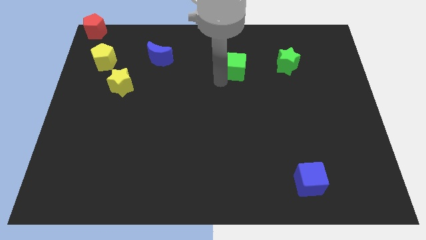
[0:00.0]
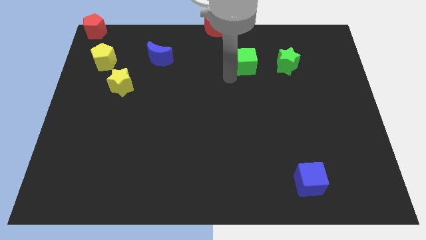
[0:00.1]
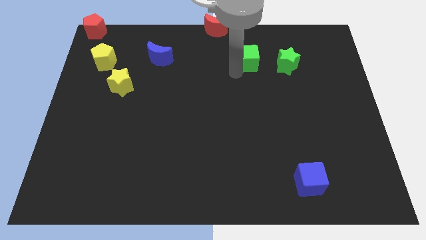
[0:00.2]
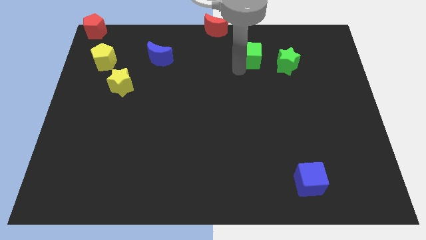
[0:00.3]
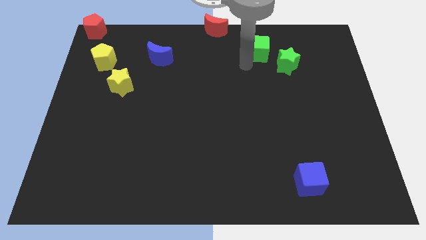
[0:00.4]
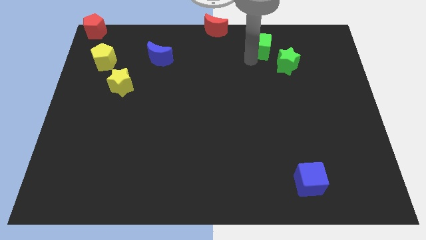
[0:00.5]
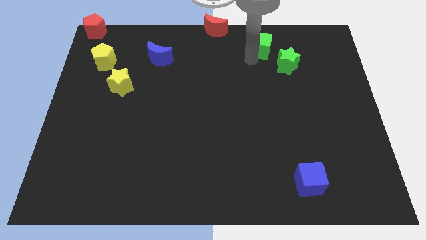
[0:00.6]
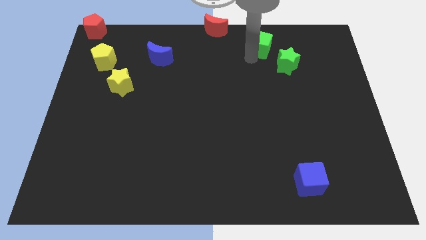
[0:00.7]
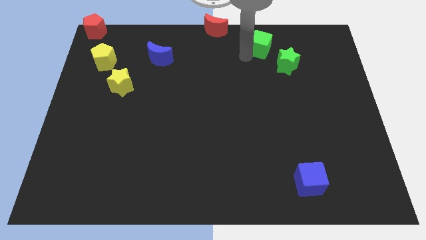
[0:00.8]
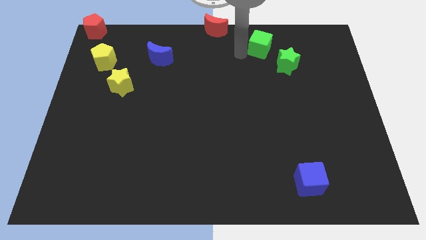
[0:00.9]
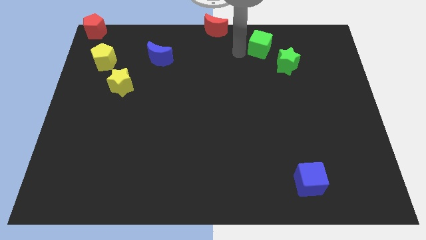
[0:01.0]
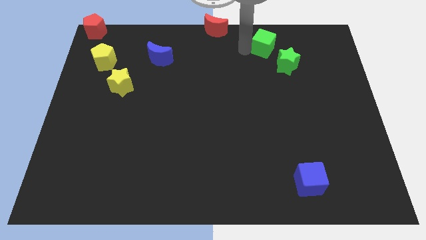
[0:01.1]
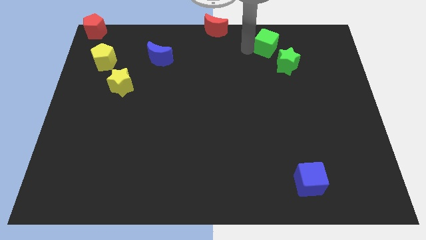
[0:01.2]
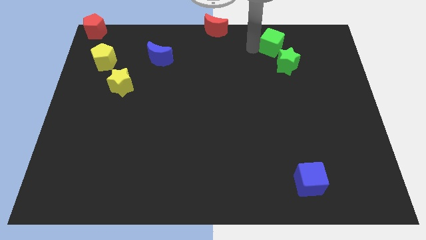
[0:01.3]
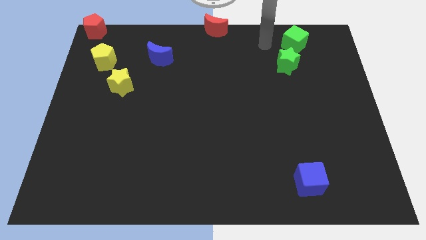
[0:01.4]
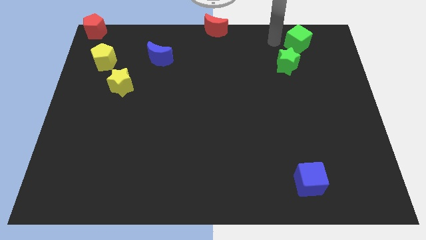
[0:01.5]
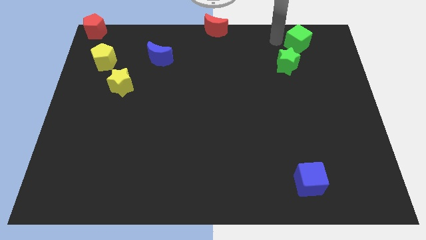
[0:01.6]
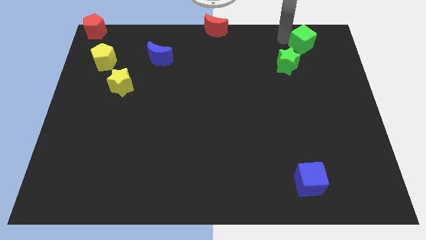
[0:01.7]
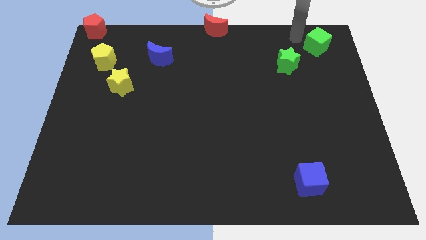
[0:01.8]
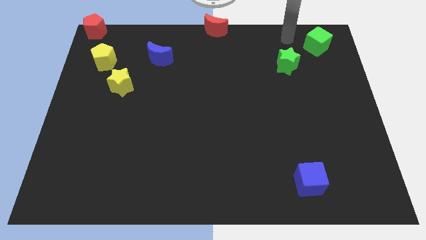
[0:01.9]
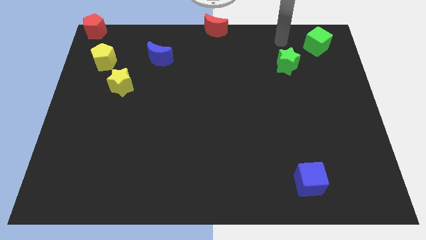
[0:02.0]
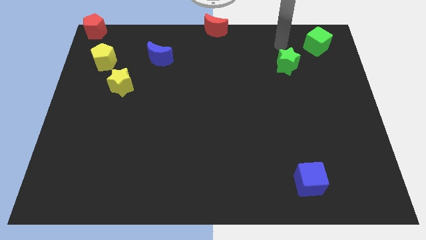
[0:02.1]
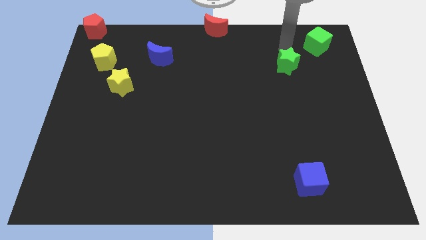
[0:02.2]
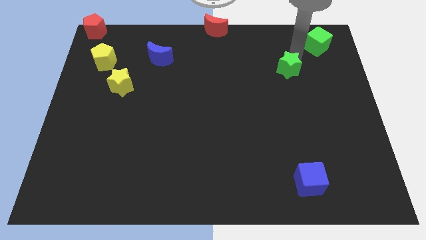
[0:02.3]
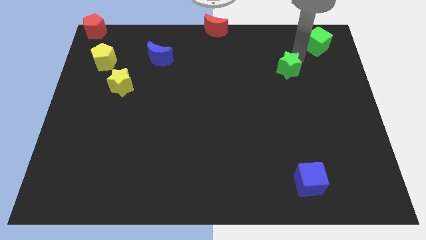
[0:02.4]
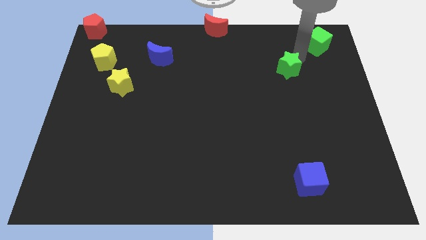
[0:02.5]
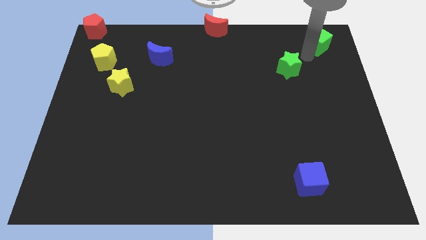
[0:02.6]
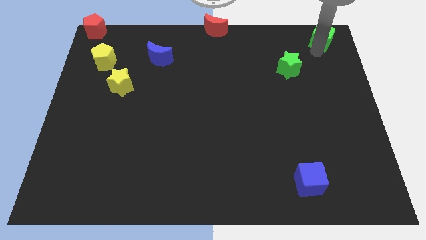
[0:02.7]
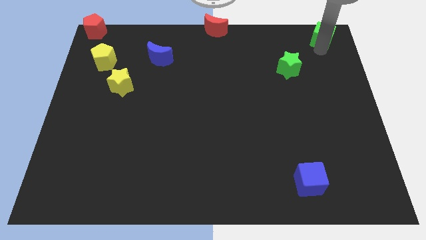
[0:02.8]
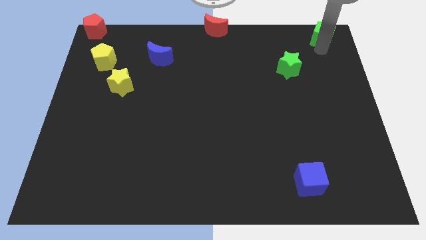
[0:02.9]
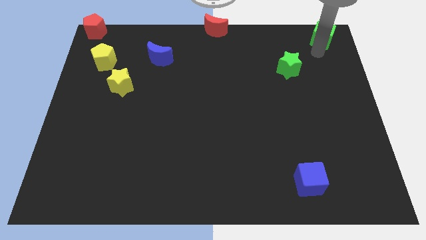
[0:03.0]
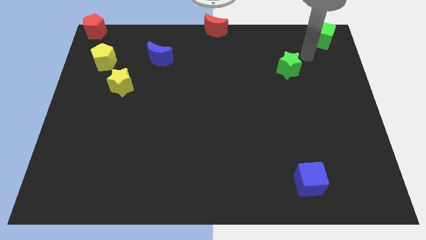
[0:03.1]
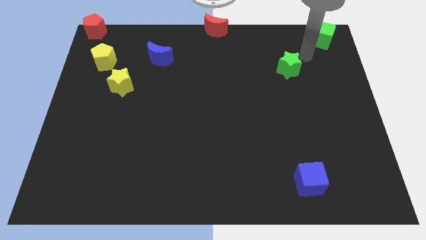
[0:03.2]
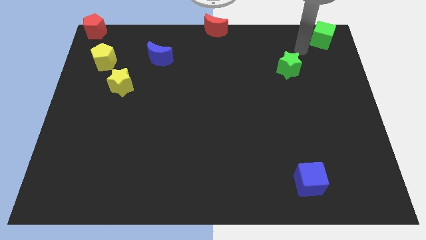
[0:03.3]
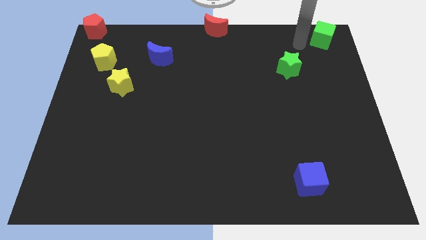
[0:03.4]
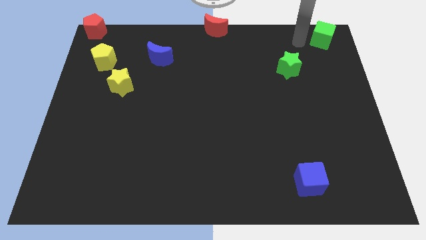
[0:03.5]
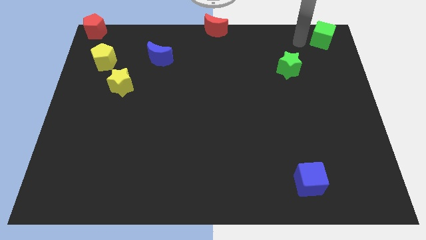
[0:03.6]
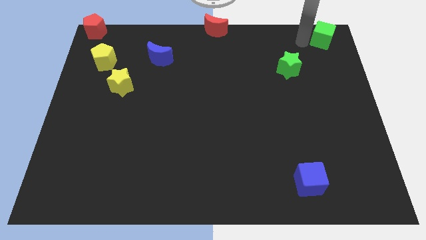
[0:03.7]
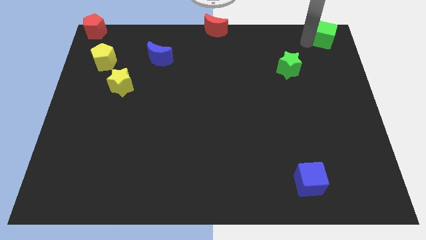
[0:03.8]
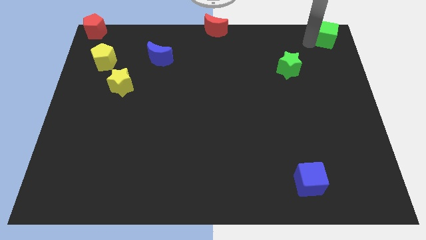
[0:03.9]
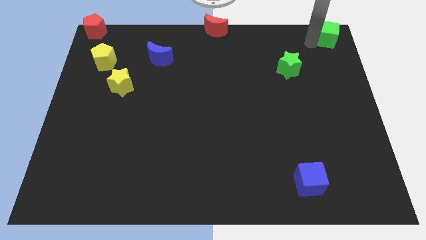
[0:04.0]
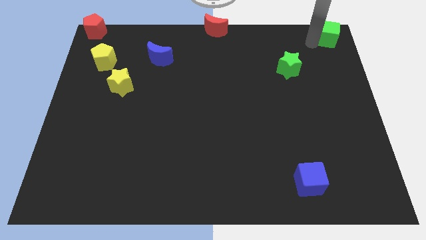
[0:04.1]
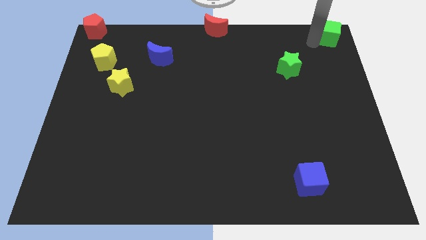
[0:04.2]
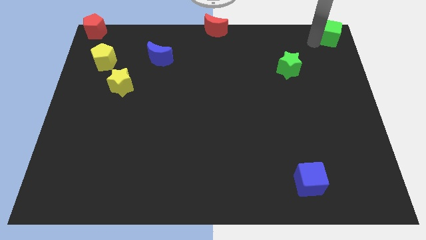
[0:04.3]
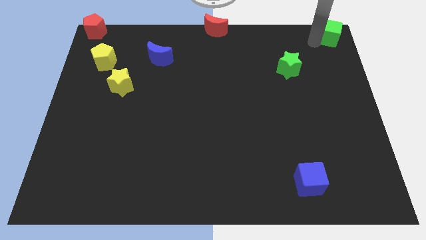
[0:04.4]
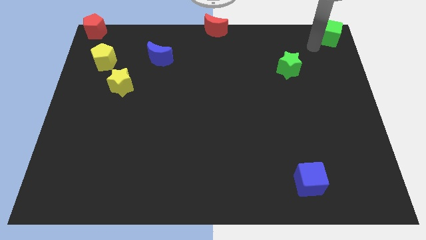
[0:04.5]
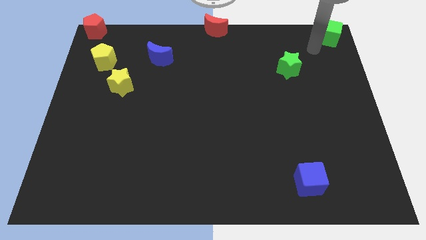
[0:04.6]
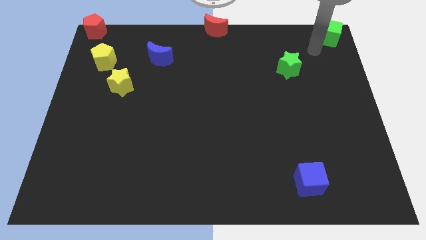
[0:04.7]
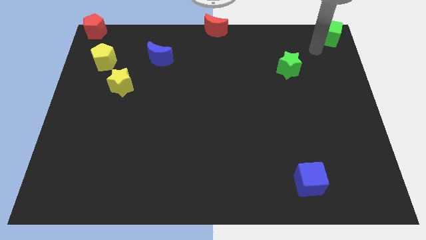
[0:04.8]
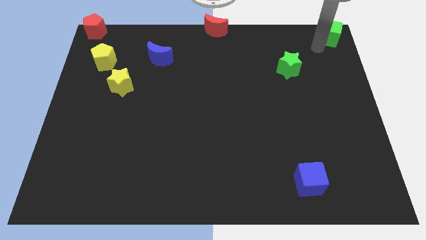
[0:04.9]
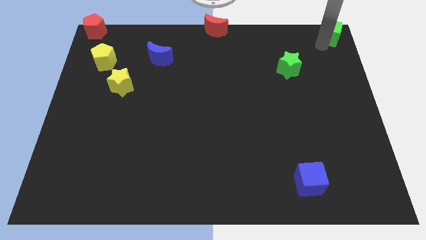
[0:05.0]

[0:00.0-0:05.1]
place the green cube at the top right corner of the board

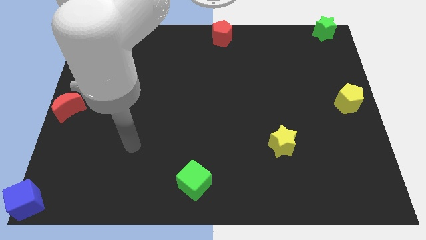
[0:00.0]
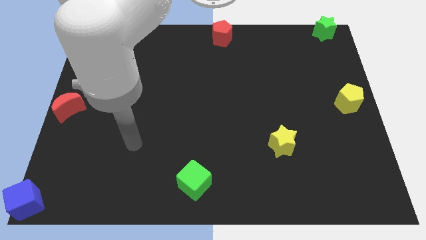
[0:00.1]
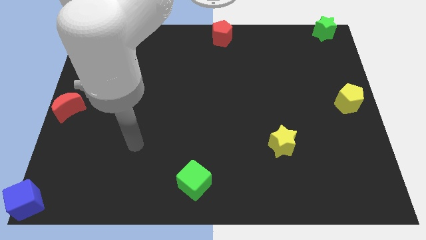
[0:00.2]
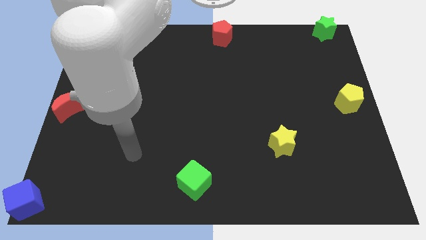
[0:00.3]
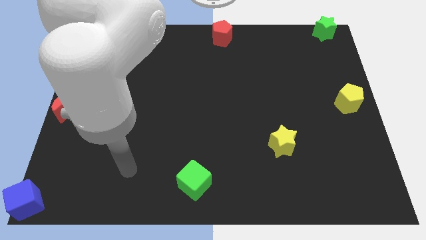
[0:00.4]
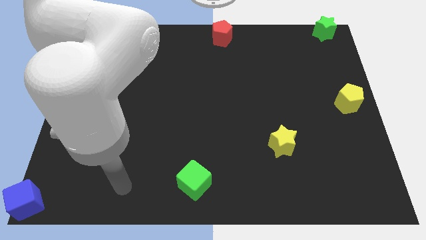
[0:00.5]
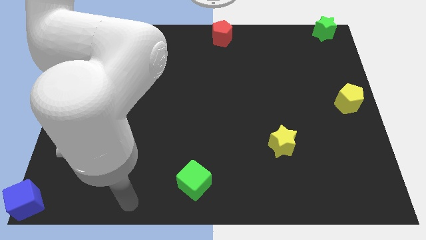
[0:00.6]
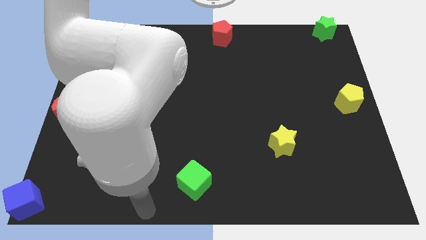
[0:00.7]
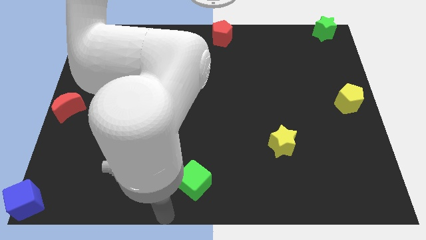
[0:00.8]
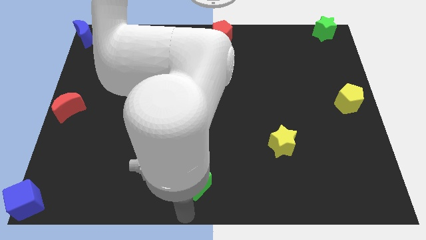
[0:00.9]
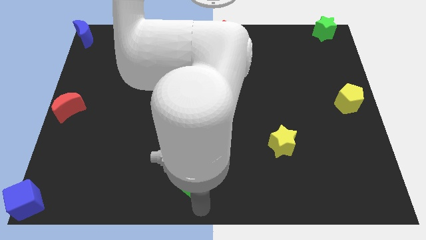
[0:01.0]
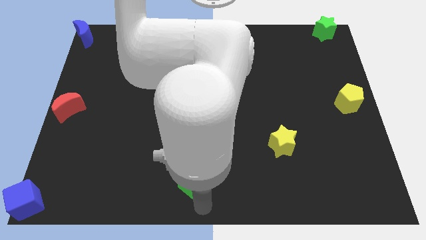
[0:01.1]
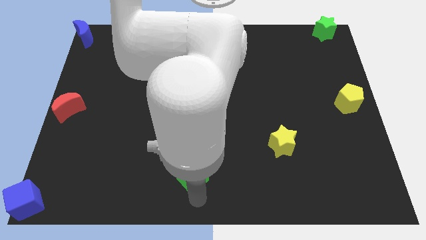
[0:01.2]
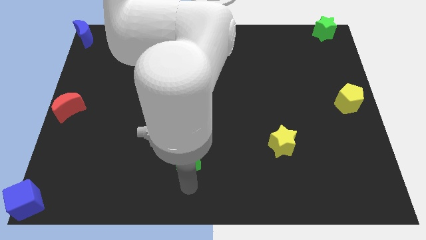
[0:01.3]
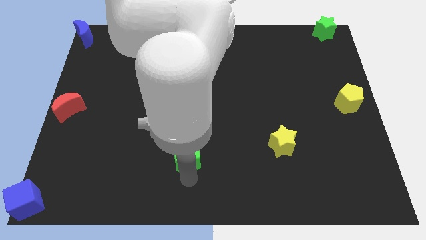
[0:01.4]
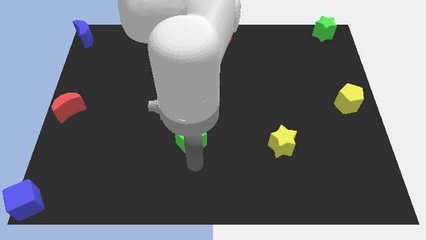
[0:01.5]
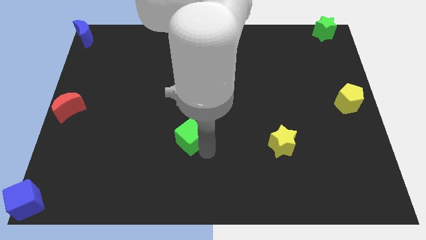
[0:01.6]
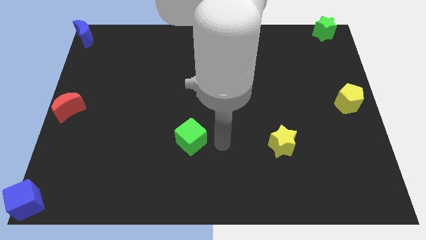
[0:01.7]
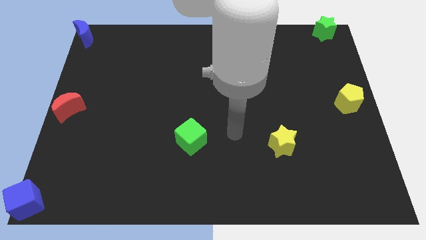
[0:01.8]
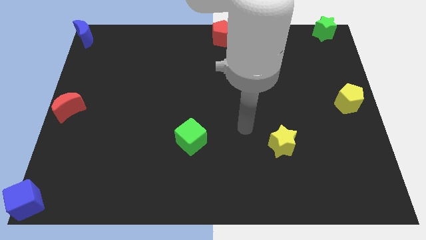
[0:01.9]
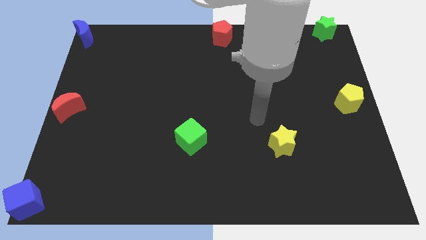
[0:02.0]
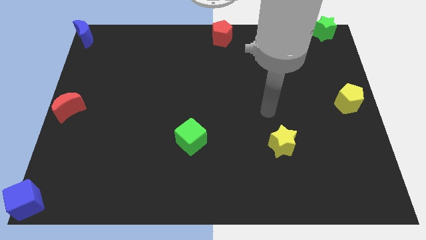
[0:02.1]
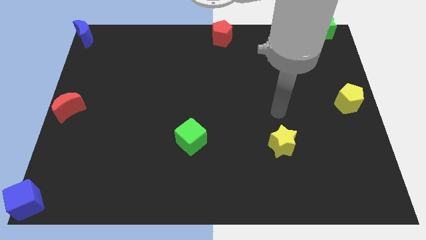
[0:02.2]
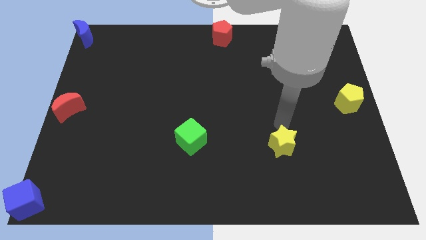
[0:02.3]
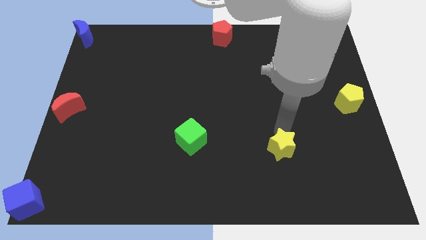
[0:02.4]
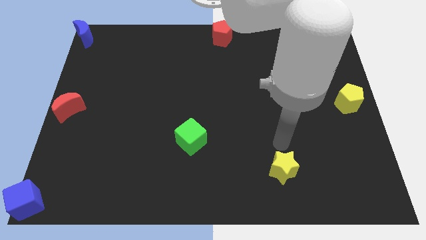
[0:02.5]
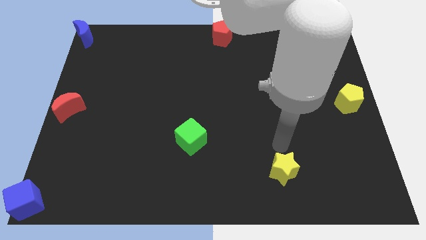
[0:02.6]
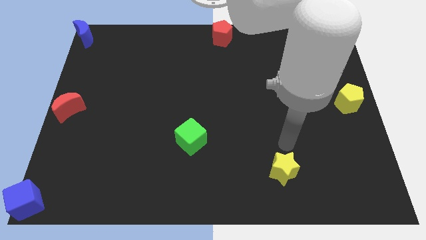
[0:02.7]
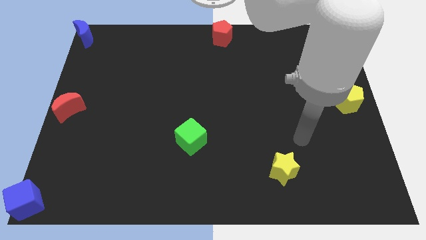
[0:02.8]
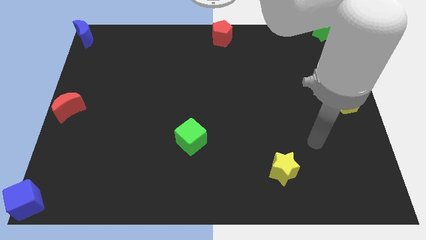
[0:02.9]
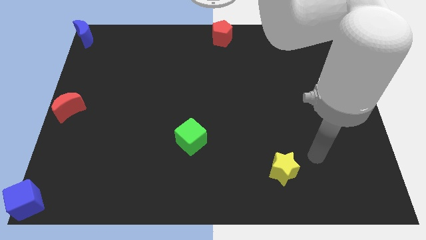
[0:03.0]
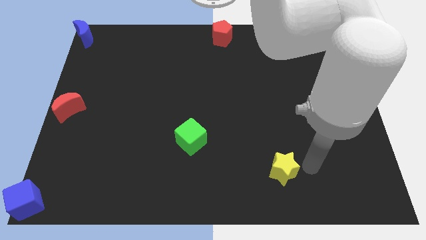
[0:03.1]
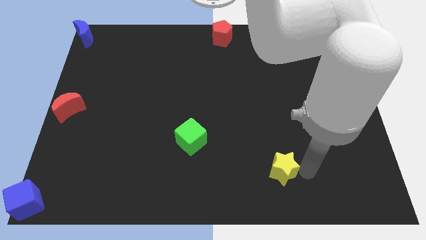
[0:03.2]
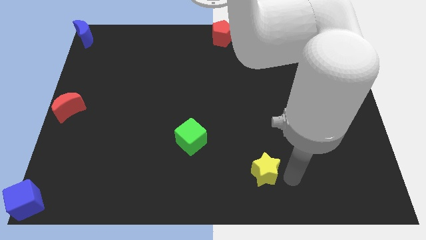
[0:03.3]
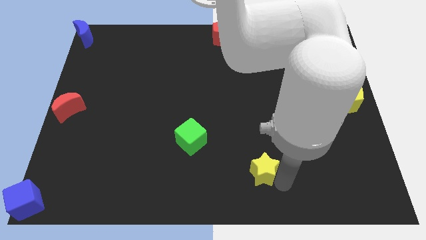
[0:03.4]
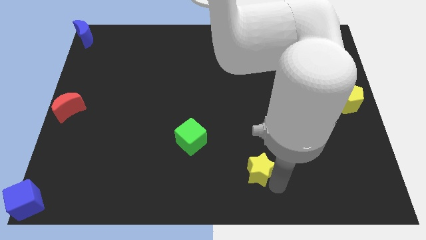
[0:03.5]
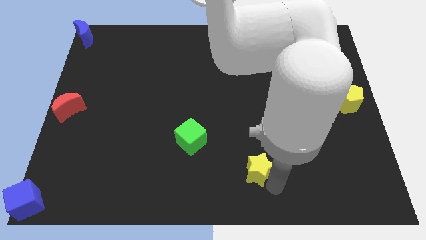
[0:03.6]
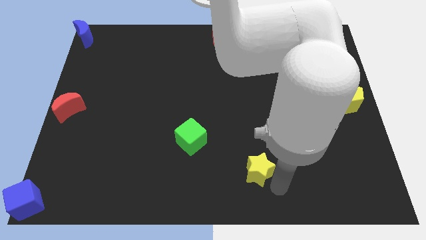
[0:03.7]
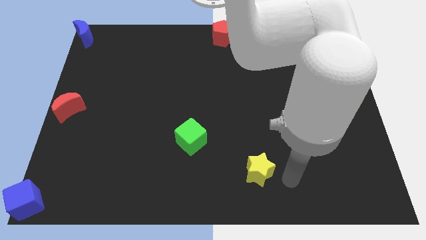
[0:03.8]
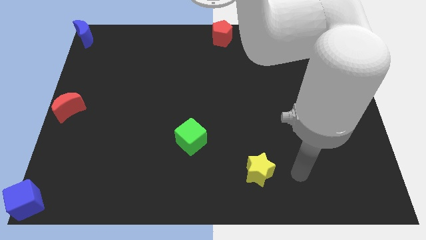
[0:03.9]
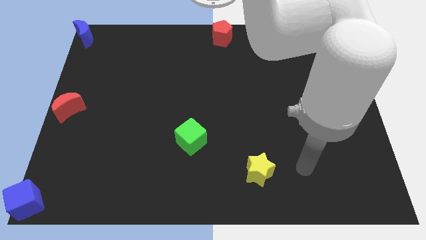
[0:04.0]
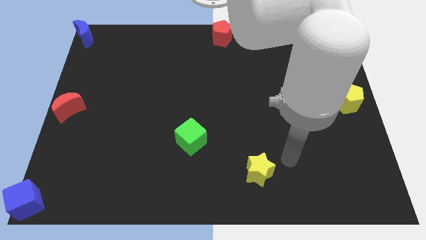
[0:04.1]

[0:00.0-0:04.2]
place the yellow star diagonally to the bottom right of the green cube
